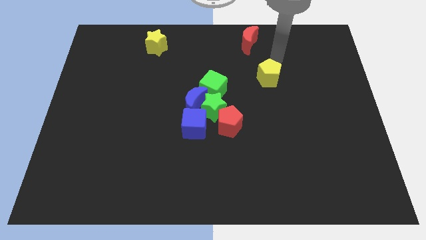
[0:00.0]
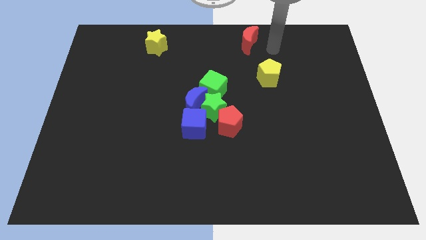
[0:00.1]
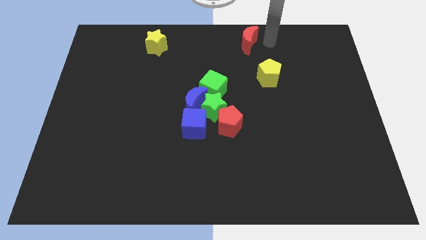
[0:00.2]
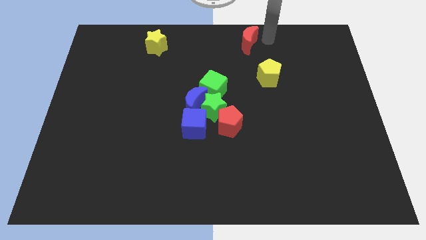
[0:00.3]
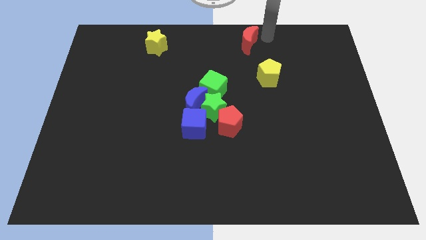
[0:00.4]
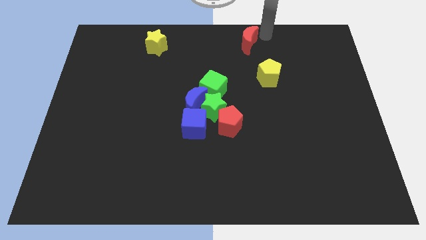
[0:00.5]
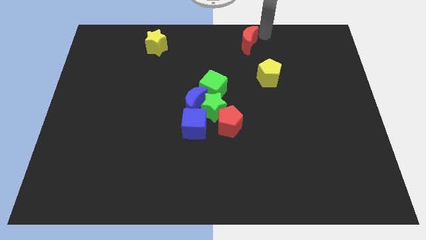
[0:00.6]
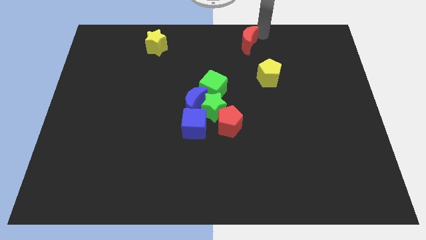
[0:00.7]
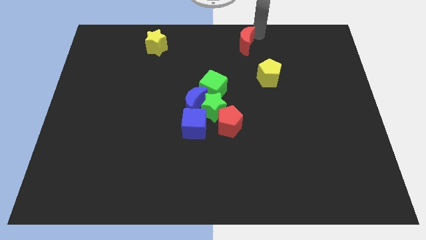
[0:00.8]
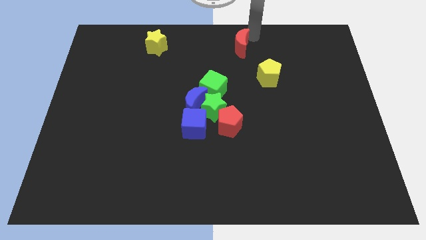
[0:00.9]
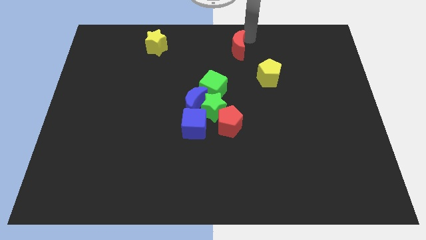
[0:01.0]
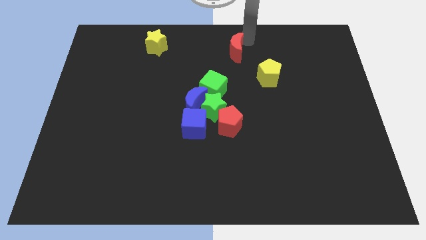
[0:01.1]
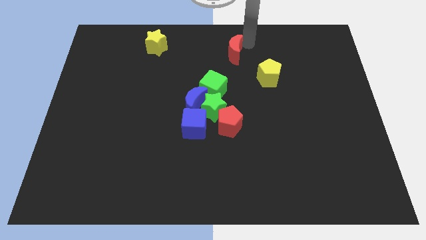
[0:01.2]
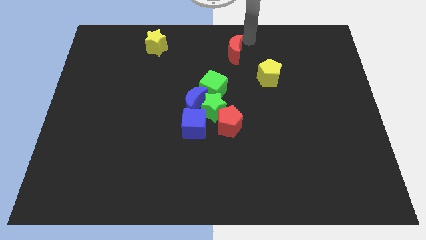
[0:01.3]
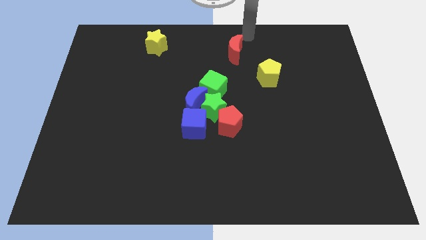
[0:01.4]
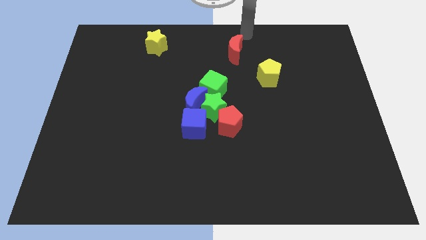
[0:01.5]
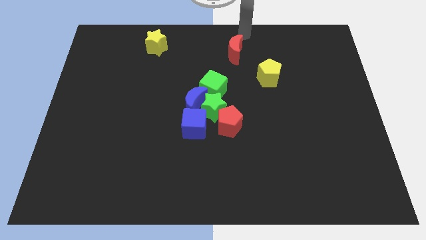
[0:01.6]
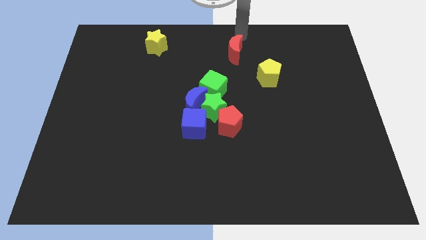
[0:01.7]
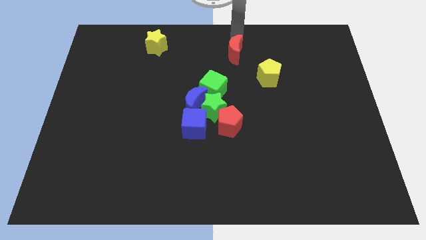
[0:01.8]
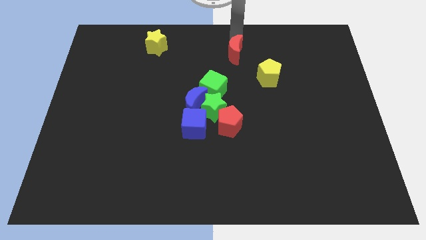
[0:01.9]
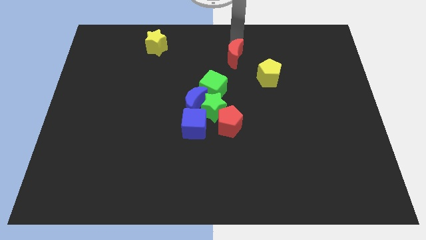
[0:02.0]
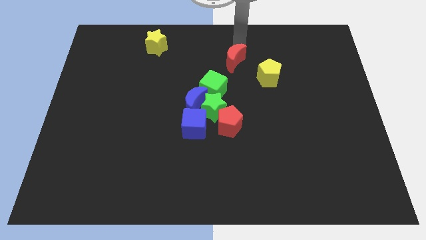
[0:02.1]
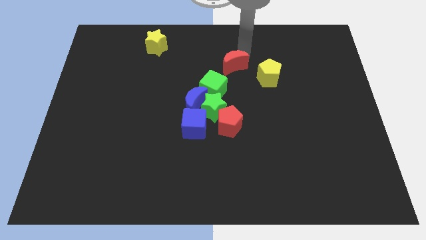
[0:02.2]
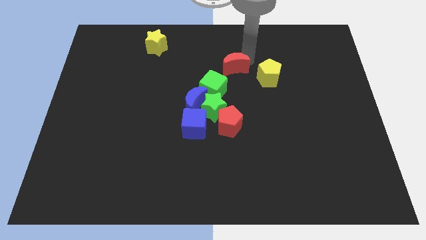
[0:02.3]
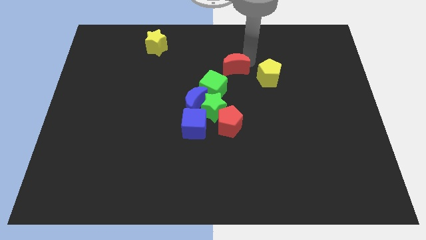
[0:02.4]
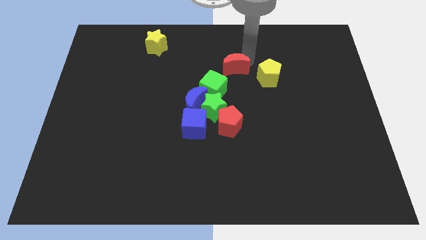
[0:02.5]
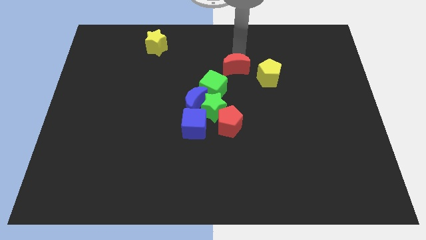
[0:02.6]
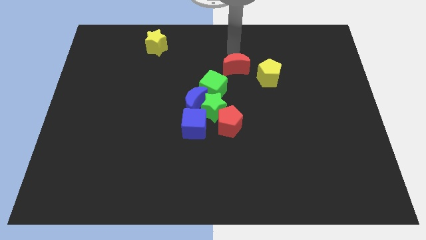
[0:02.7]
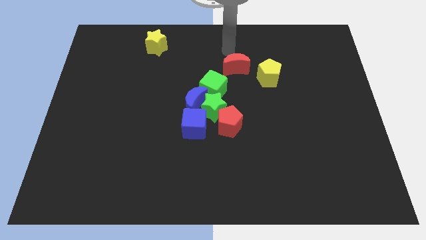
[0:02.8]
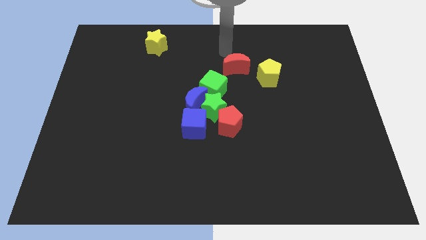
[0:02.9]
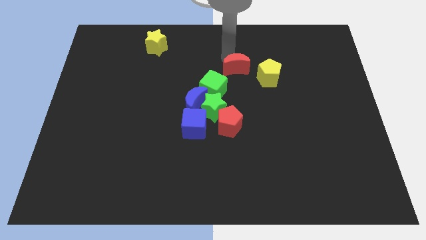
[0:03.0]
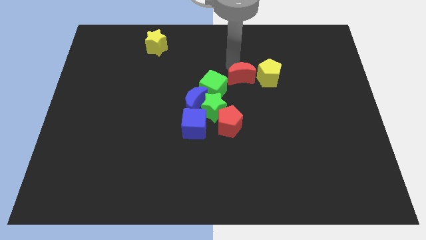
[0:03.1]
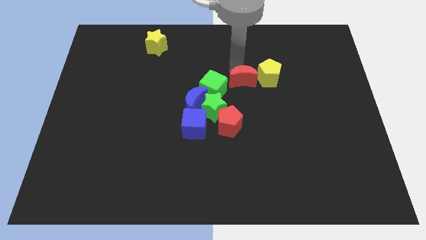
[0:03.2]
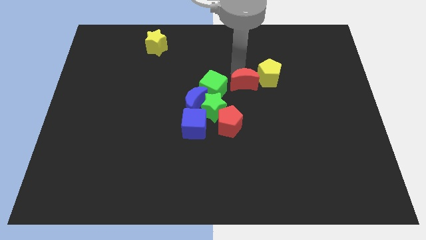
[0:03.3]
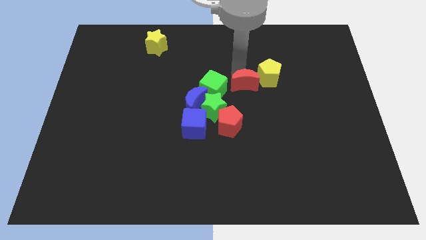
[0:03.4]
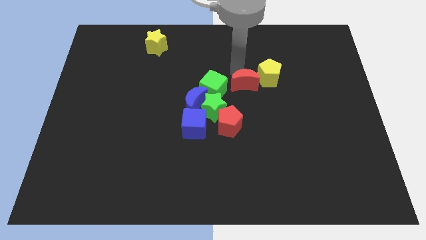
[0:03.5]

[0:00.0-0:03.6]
place the red moon between the green cube and yellow pentagon

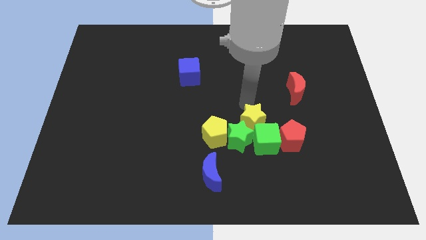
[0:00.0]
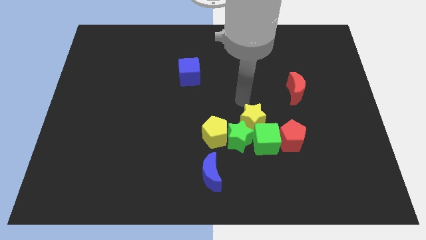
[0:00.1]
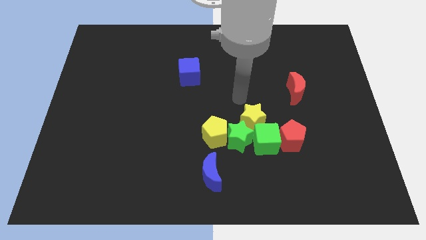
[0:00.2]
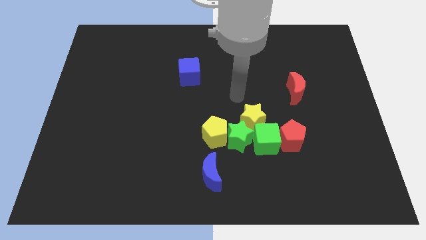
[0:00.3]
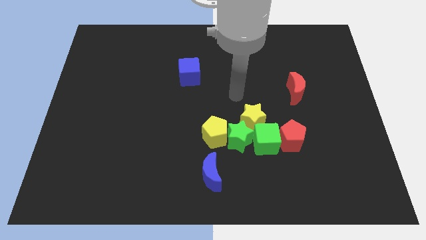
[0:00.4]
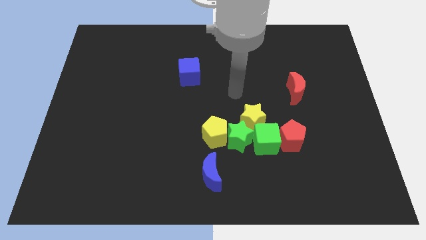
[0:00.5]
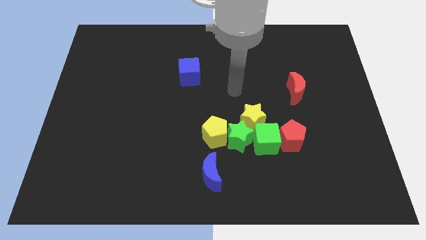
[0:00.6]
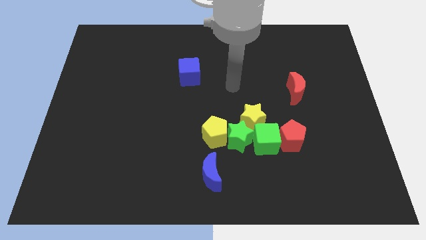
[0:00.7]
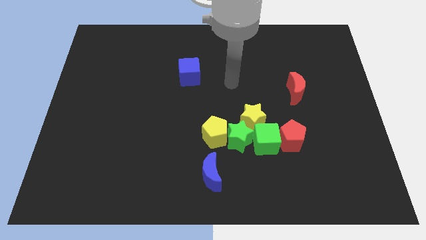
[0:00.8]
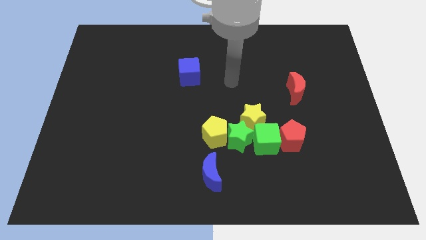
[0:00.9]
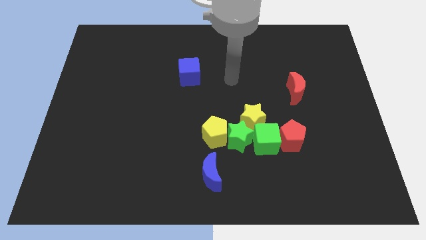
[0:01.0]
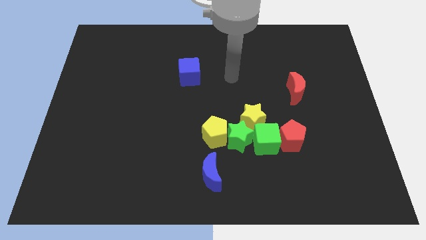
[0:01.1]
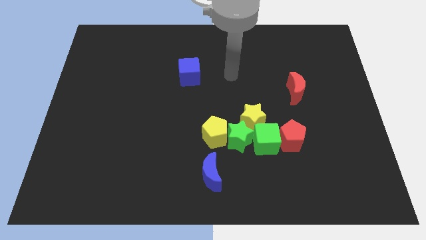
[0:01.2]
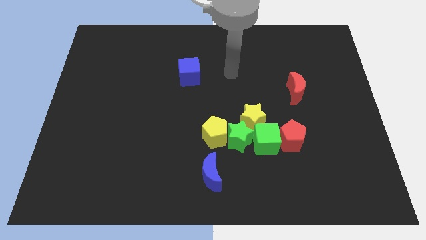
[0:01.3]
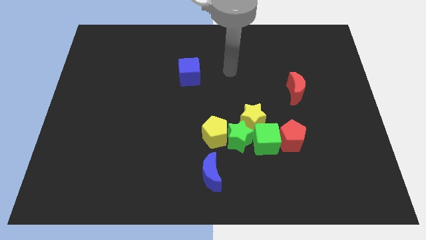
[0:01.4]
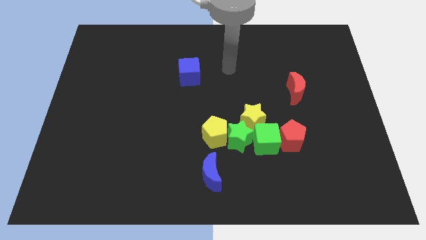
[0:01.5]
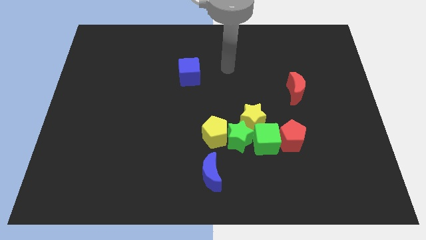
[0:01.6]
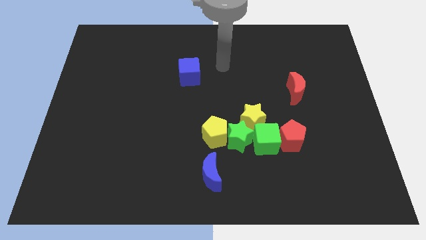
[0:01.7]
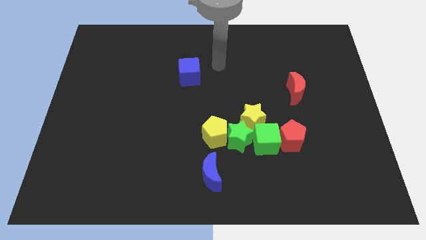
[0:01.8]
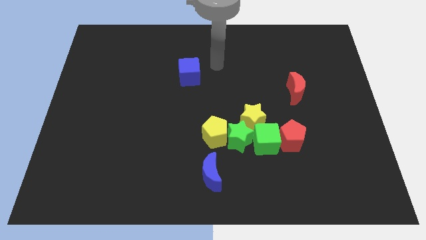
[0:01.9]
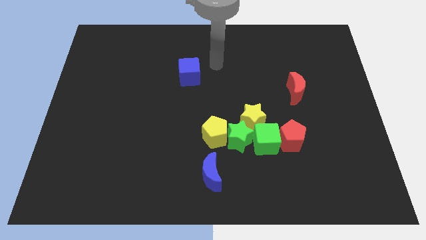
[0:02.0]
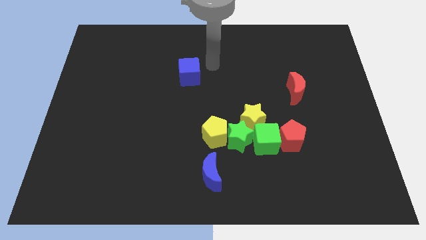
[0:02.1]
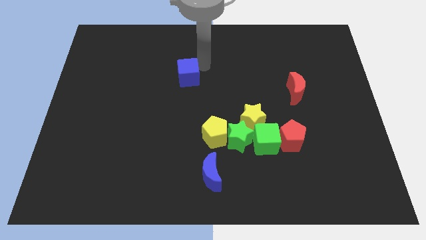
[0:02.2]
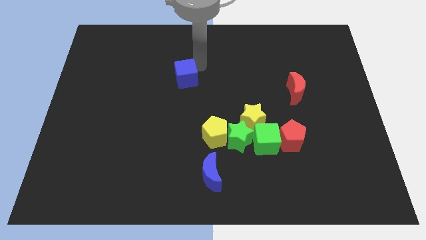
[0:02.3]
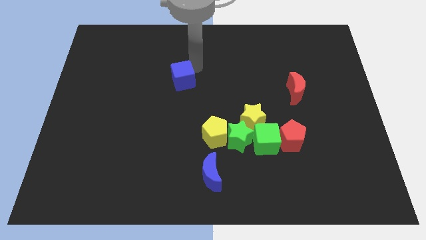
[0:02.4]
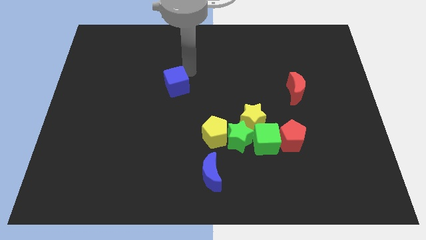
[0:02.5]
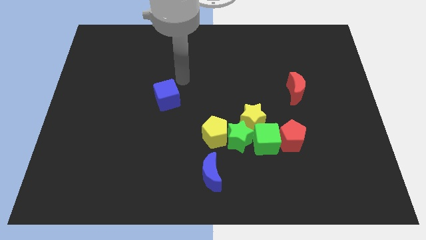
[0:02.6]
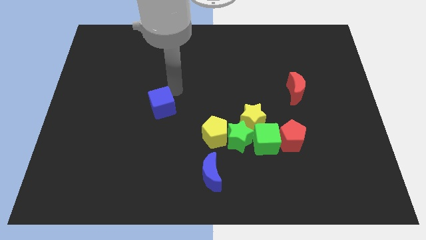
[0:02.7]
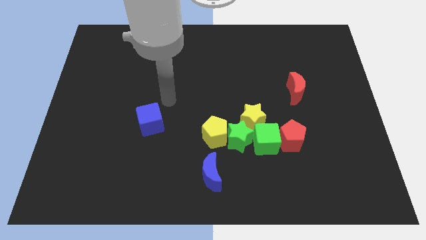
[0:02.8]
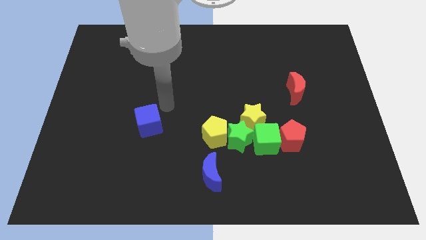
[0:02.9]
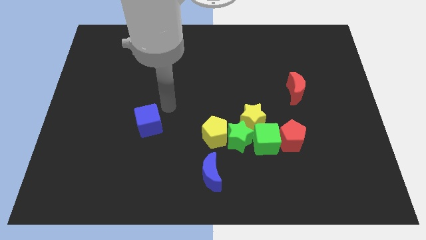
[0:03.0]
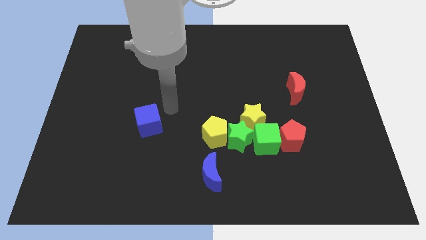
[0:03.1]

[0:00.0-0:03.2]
push the blue cube towards the bottom left

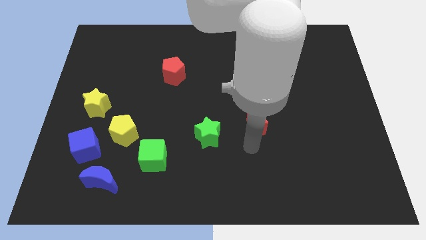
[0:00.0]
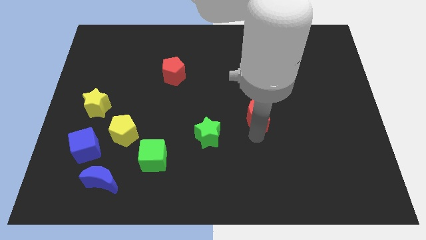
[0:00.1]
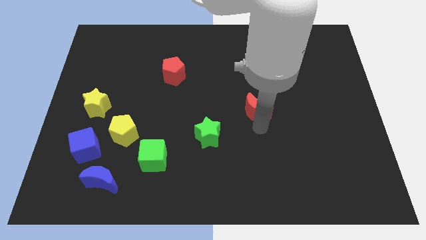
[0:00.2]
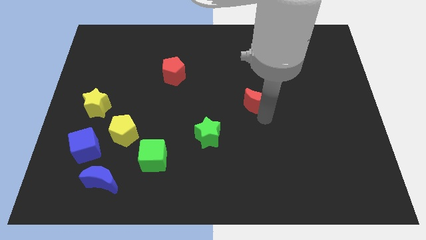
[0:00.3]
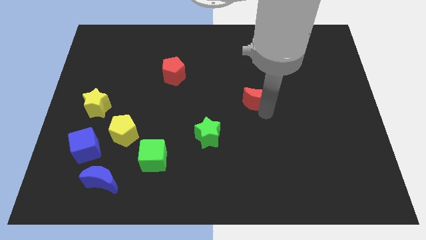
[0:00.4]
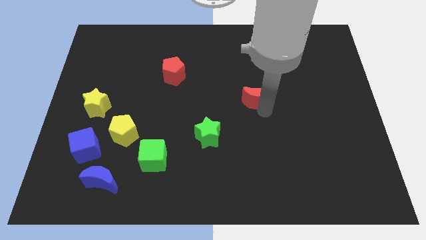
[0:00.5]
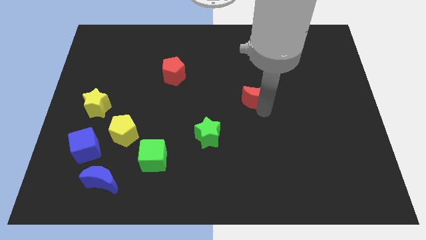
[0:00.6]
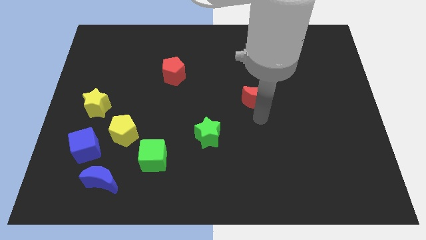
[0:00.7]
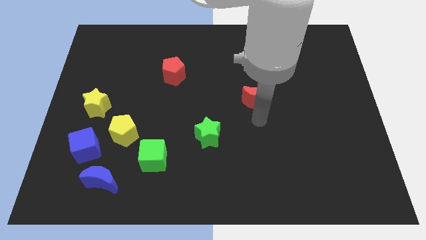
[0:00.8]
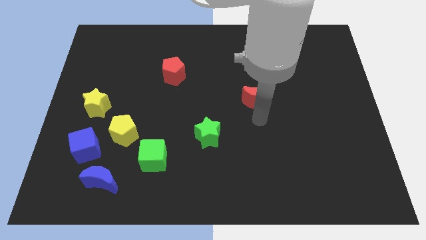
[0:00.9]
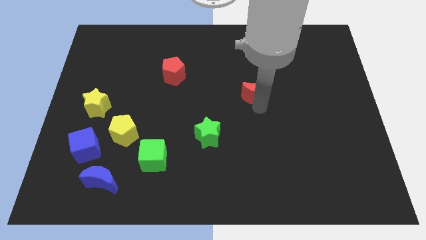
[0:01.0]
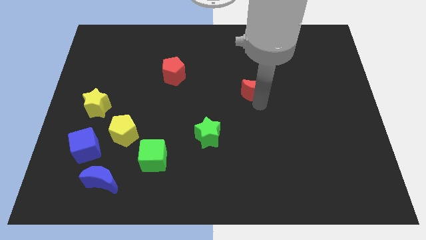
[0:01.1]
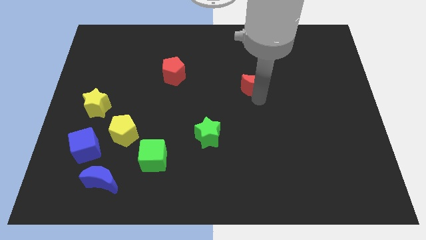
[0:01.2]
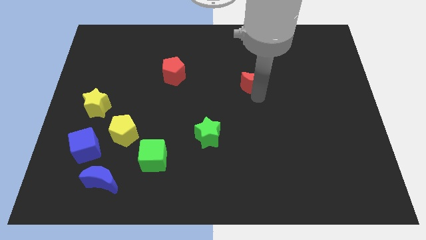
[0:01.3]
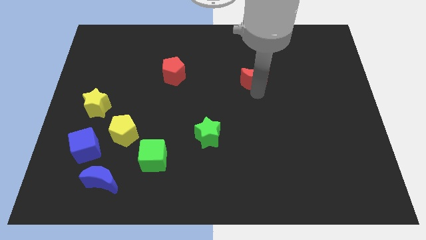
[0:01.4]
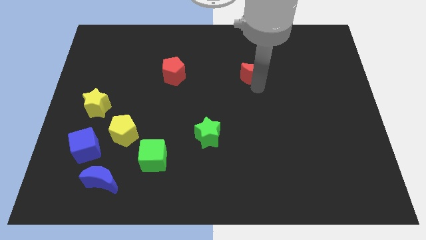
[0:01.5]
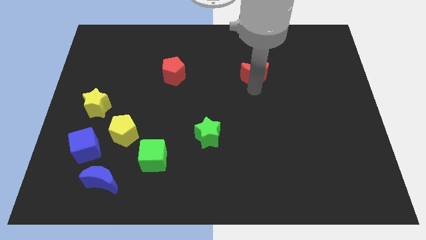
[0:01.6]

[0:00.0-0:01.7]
drag the red moon slightly upwards

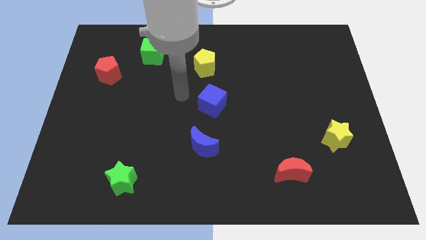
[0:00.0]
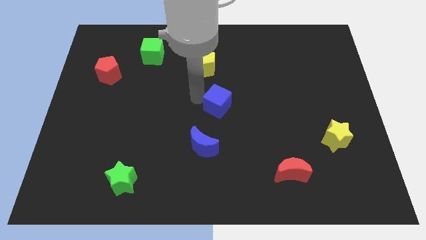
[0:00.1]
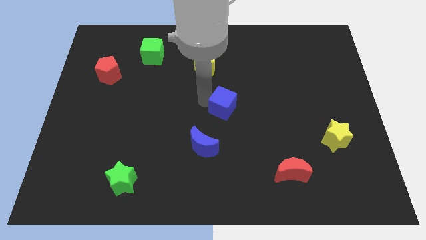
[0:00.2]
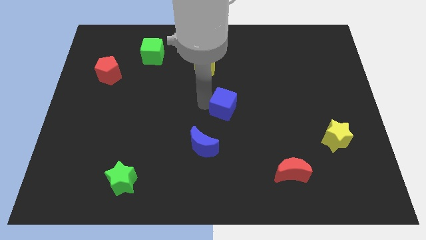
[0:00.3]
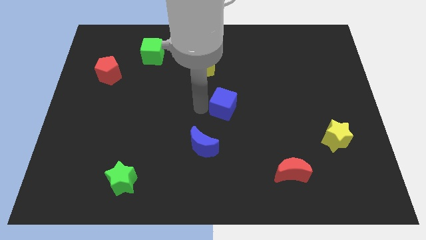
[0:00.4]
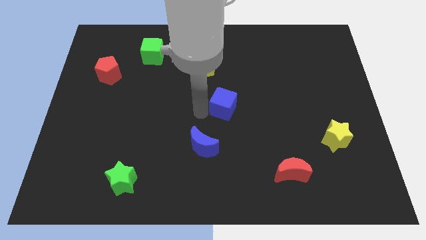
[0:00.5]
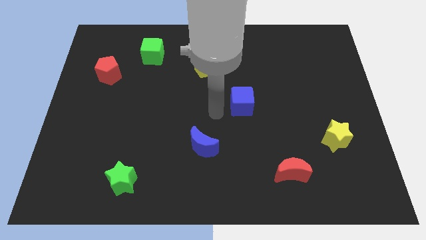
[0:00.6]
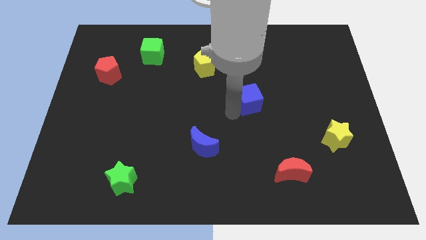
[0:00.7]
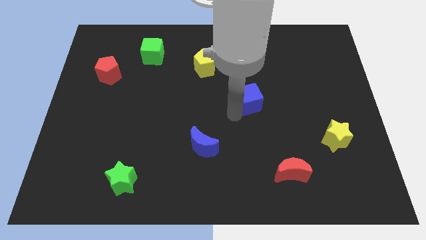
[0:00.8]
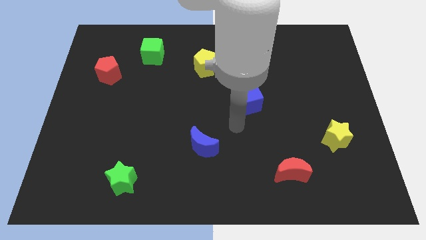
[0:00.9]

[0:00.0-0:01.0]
push blue cube slightly to the right
